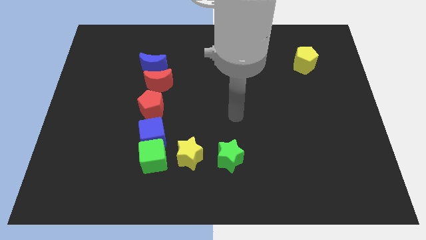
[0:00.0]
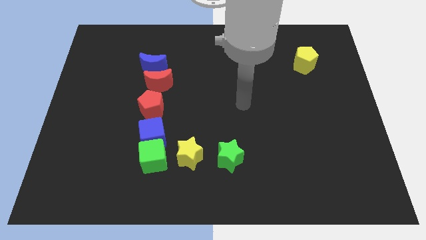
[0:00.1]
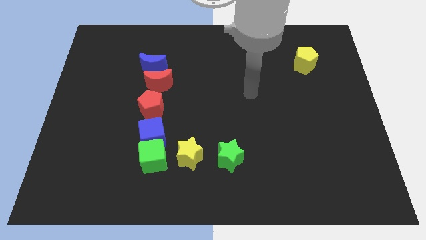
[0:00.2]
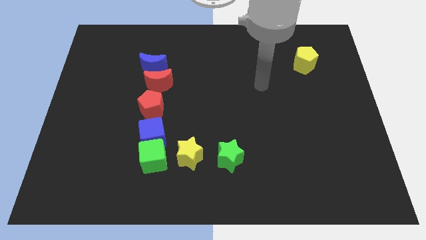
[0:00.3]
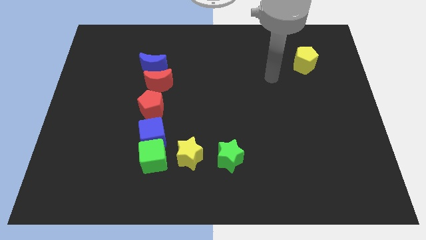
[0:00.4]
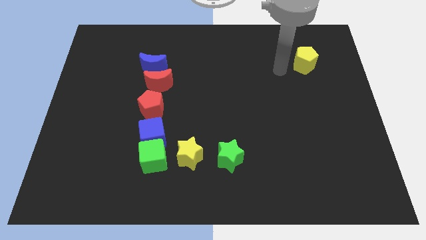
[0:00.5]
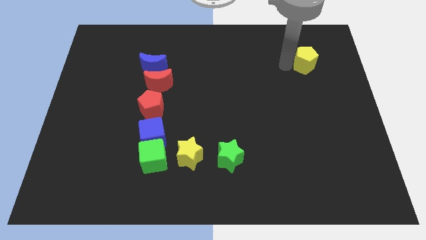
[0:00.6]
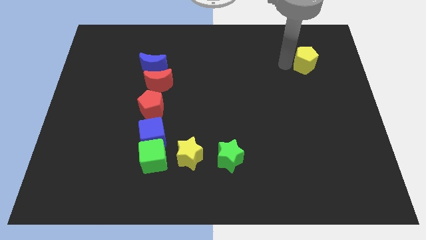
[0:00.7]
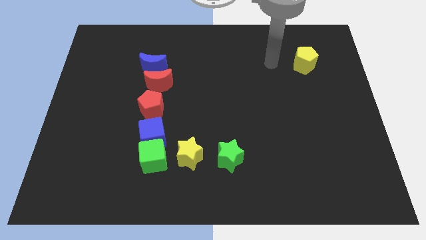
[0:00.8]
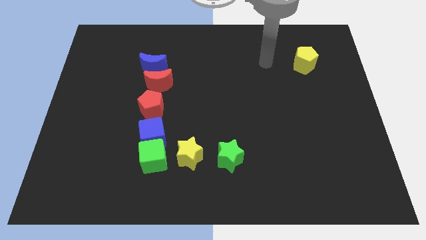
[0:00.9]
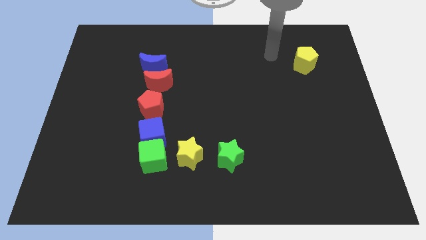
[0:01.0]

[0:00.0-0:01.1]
point your arm at the left of the yellow pentagon

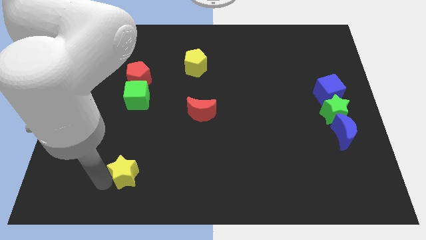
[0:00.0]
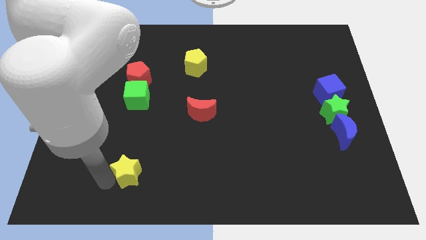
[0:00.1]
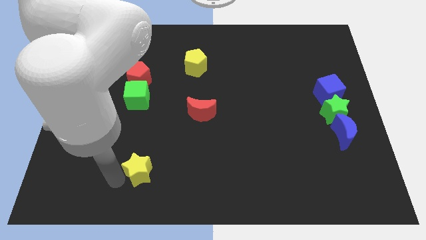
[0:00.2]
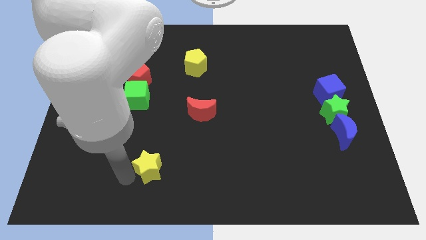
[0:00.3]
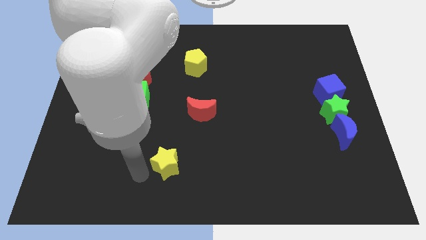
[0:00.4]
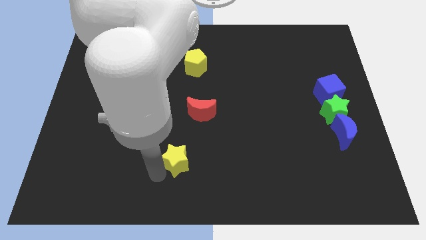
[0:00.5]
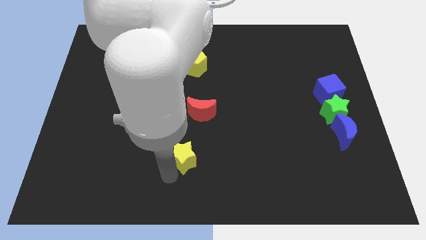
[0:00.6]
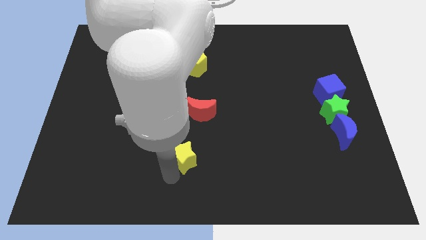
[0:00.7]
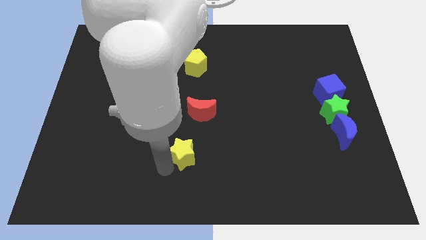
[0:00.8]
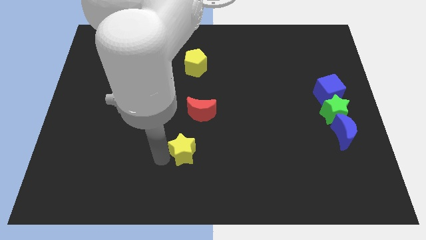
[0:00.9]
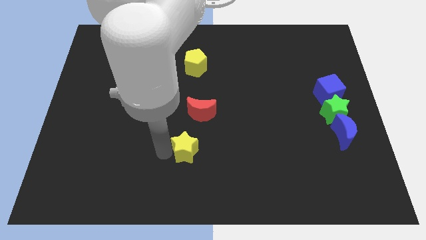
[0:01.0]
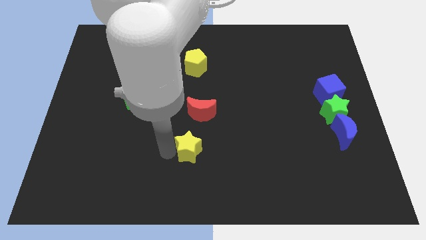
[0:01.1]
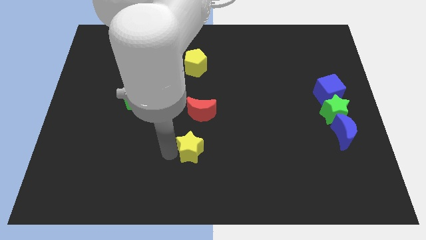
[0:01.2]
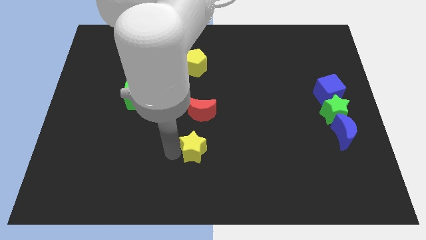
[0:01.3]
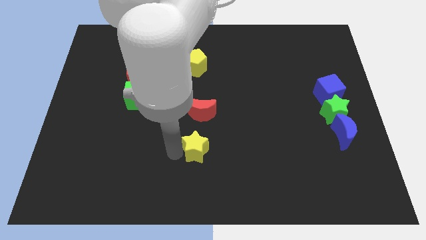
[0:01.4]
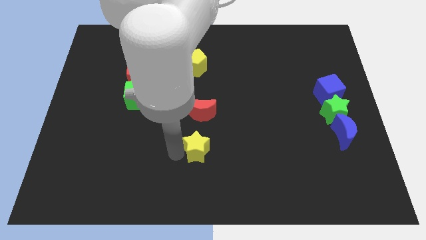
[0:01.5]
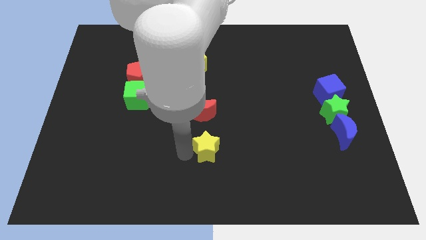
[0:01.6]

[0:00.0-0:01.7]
move yellow star below red moon

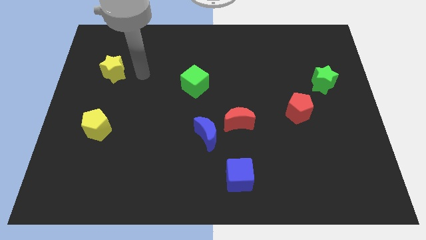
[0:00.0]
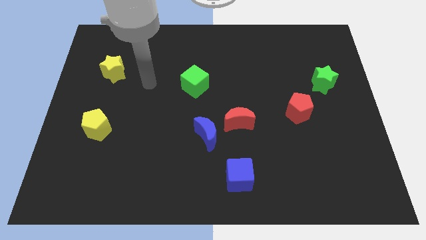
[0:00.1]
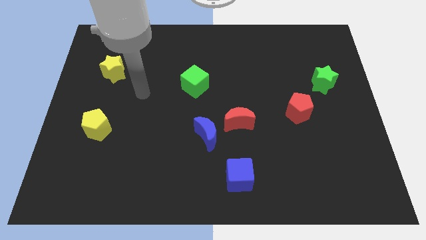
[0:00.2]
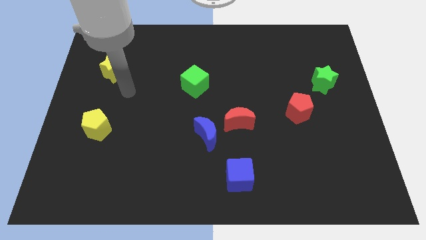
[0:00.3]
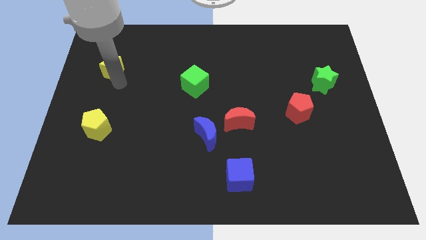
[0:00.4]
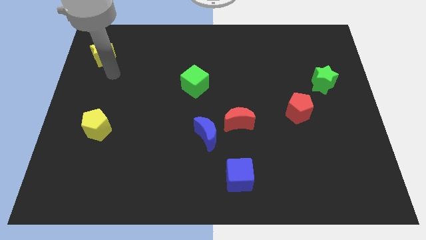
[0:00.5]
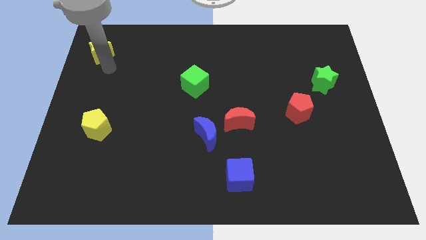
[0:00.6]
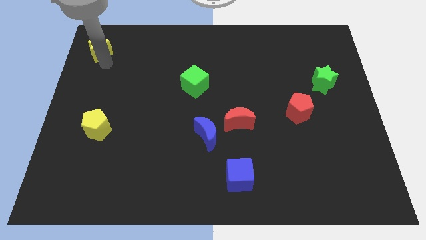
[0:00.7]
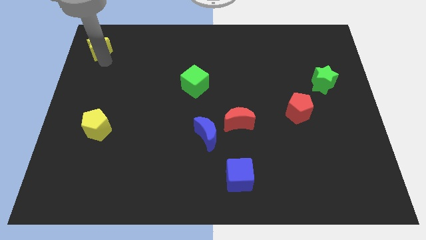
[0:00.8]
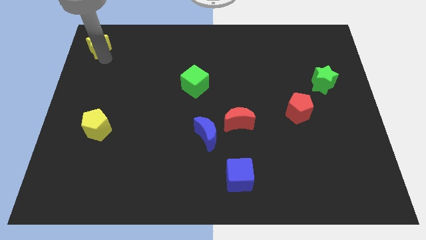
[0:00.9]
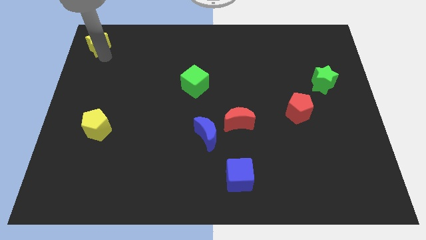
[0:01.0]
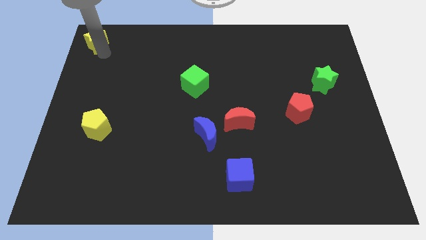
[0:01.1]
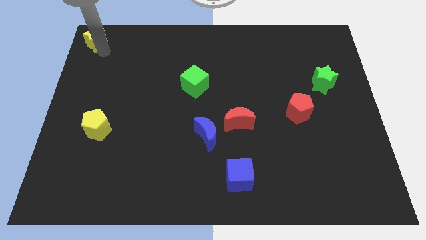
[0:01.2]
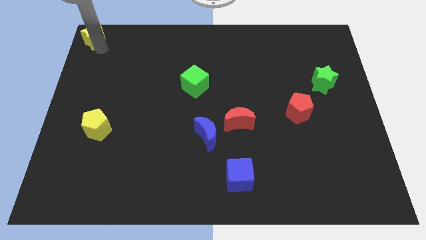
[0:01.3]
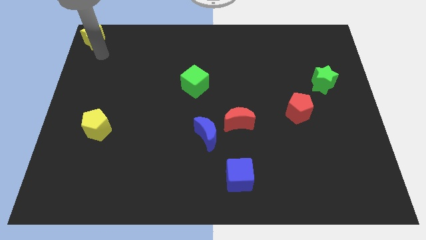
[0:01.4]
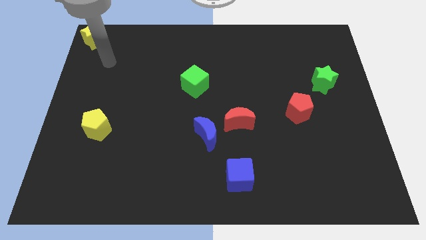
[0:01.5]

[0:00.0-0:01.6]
place the yellow star at the top left corner of the board

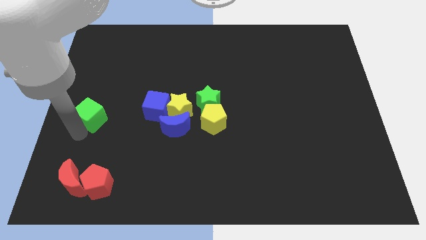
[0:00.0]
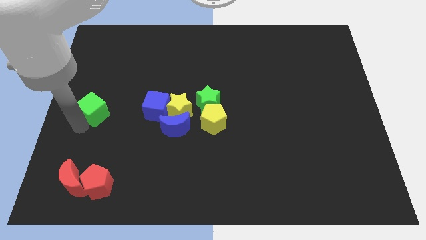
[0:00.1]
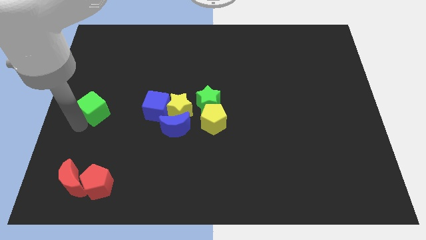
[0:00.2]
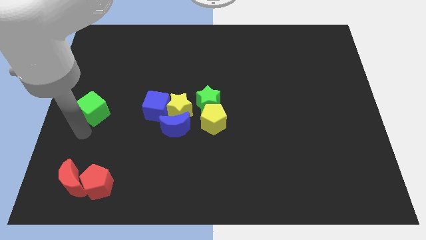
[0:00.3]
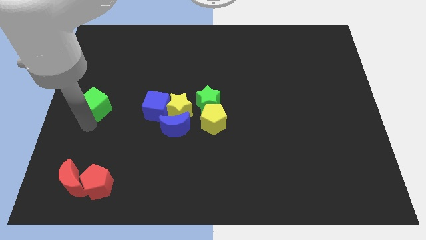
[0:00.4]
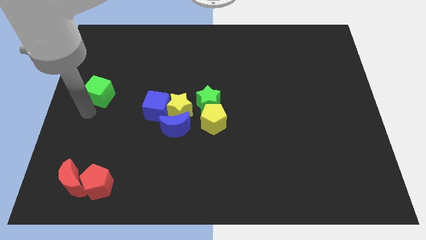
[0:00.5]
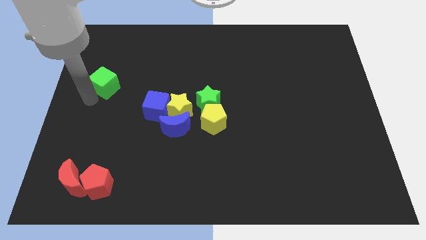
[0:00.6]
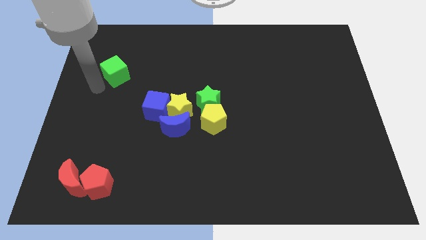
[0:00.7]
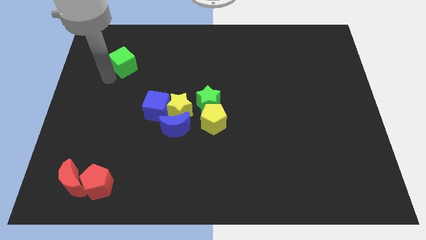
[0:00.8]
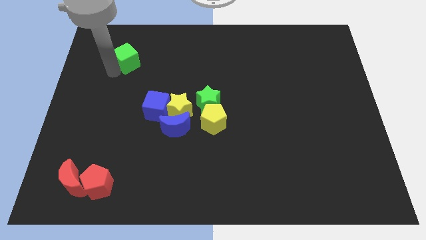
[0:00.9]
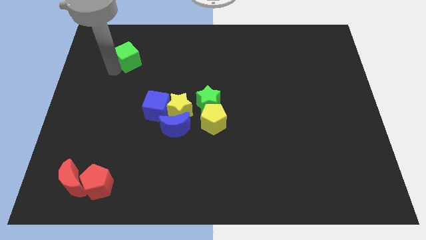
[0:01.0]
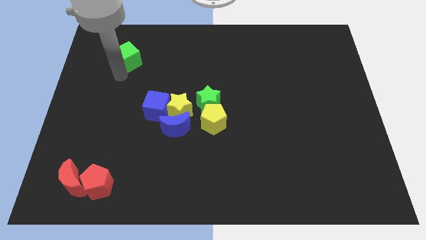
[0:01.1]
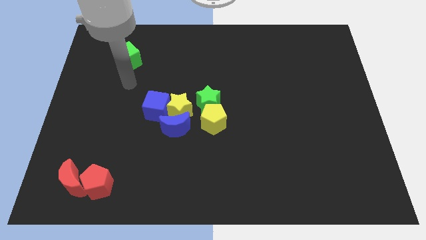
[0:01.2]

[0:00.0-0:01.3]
push the green cube diagonal top left to the blue cube

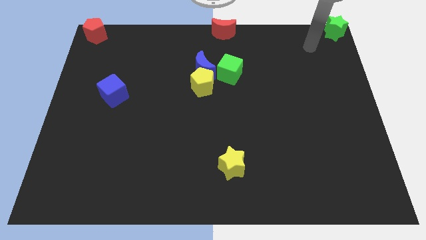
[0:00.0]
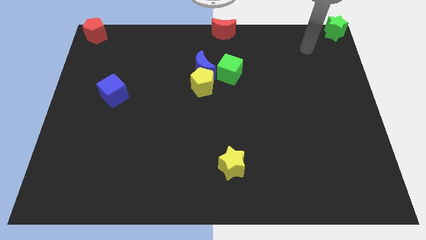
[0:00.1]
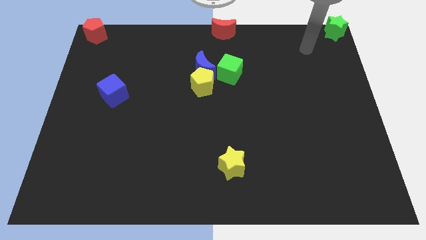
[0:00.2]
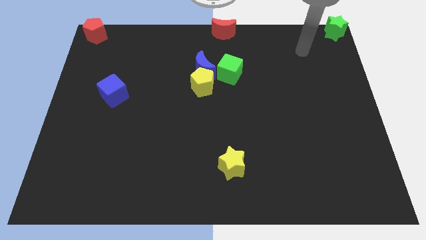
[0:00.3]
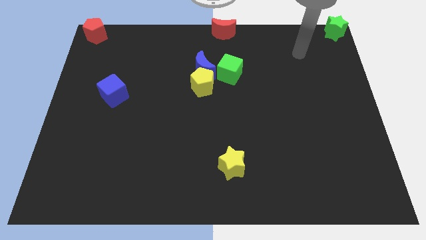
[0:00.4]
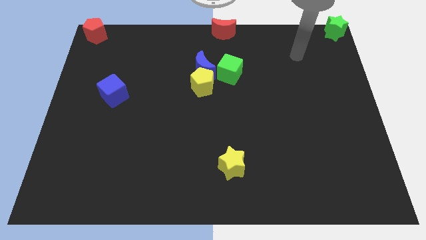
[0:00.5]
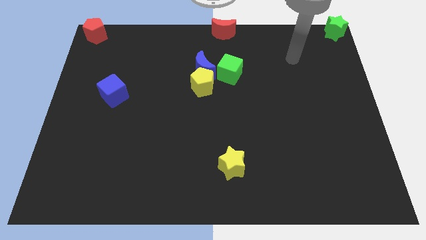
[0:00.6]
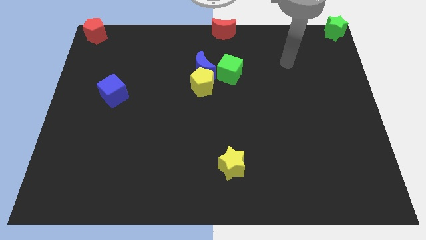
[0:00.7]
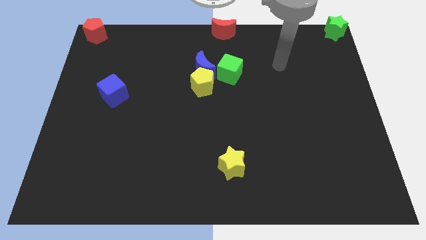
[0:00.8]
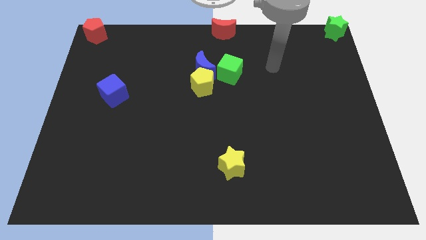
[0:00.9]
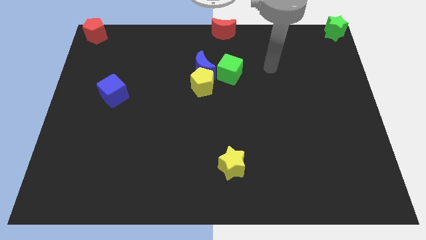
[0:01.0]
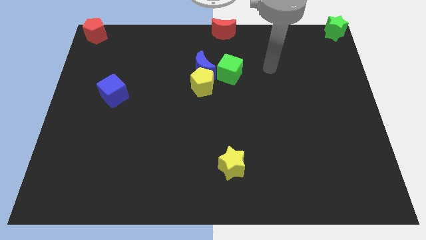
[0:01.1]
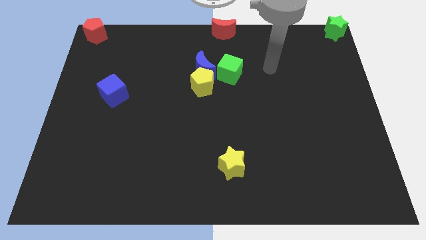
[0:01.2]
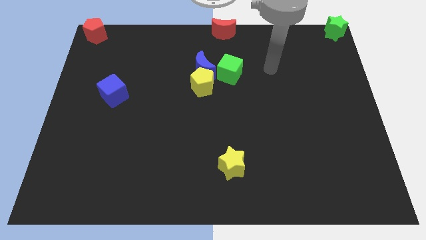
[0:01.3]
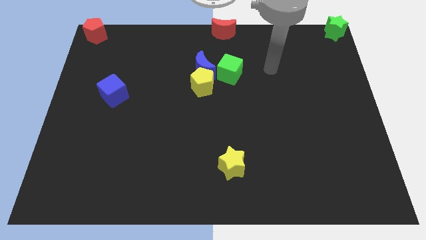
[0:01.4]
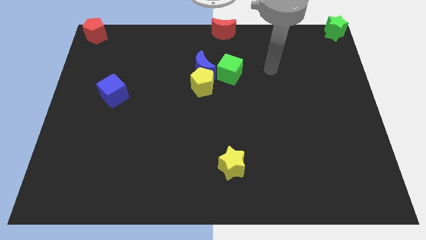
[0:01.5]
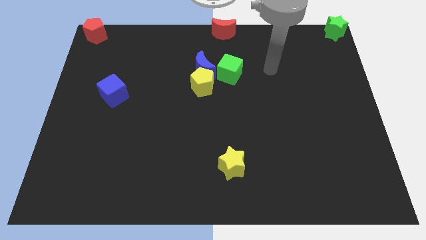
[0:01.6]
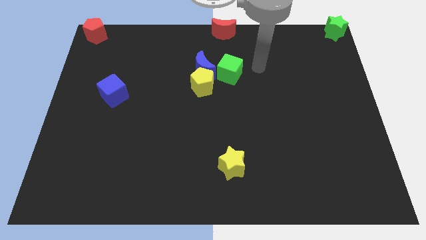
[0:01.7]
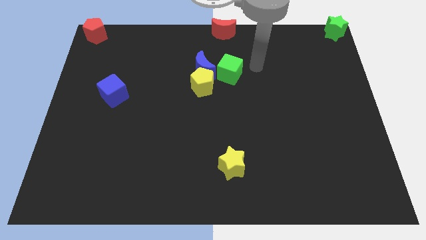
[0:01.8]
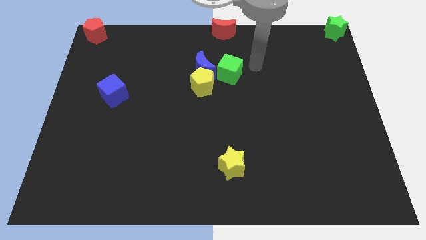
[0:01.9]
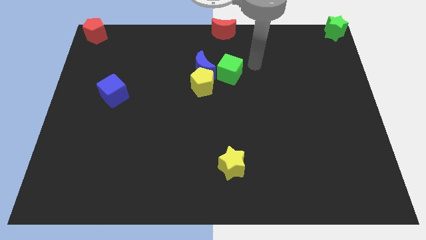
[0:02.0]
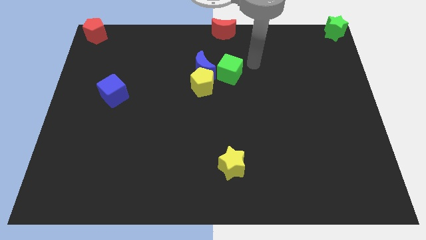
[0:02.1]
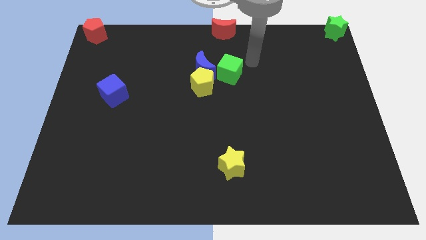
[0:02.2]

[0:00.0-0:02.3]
move the arm towards the green cube

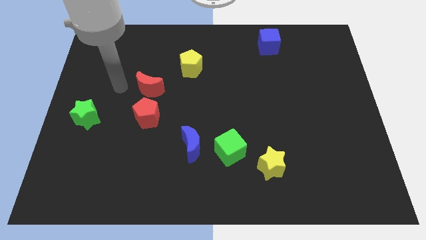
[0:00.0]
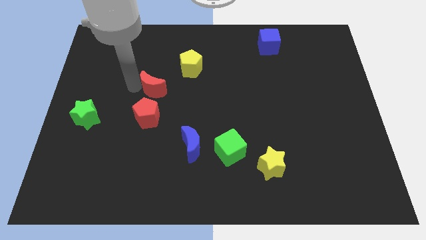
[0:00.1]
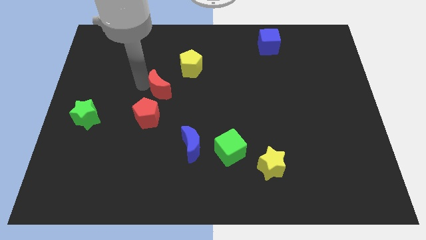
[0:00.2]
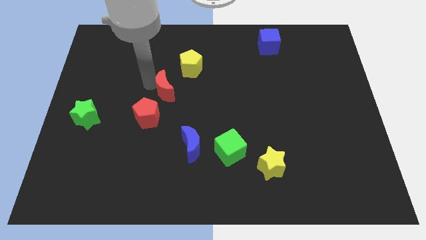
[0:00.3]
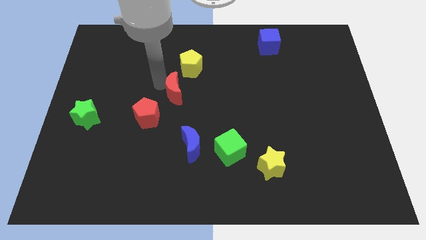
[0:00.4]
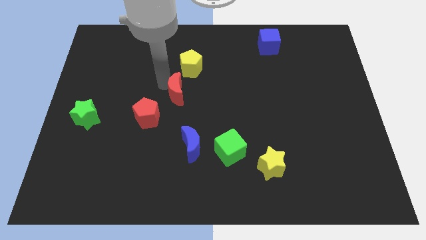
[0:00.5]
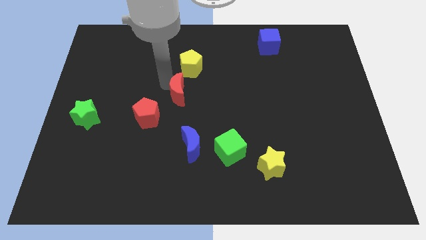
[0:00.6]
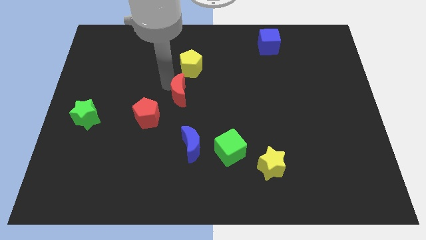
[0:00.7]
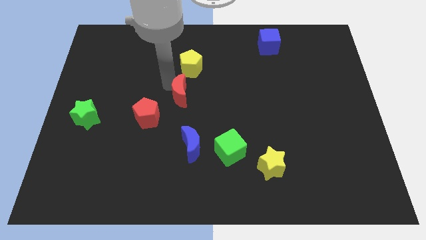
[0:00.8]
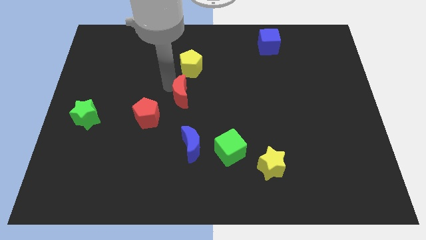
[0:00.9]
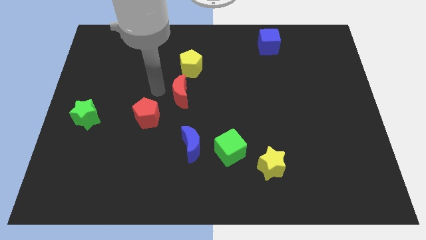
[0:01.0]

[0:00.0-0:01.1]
push the red crecent towards the center of board
